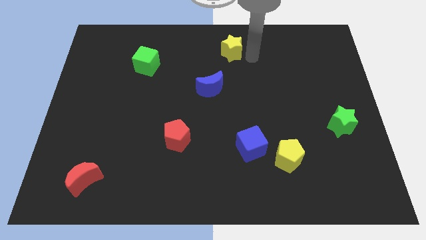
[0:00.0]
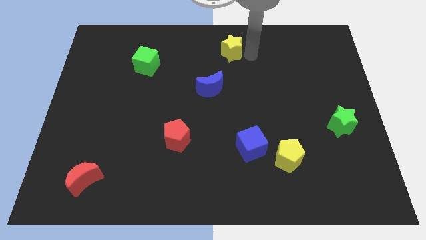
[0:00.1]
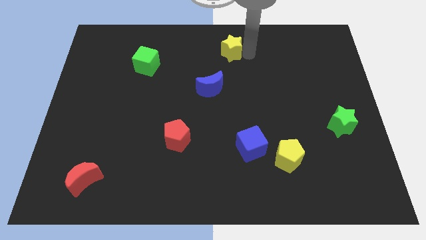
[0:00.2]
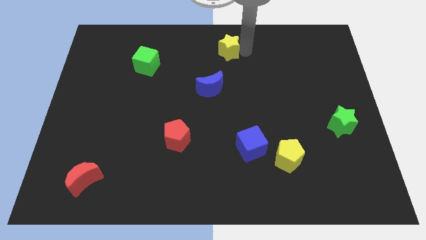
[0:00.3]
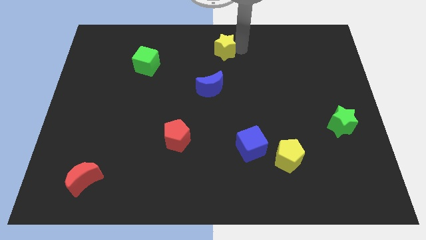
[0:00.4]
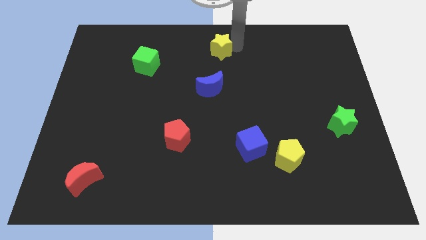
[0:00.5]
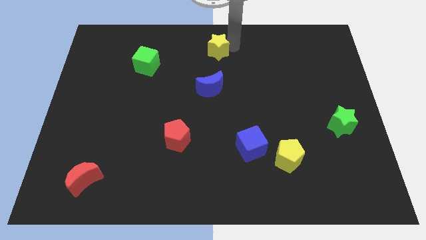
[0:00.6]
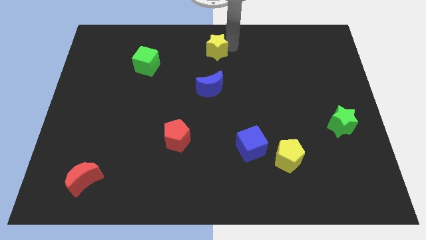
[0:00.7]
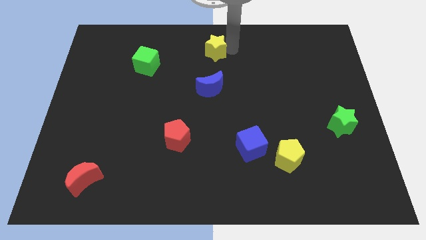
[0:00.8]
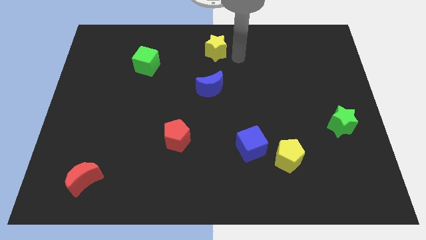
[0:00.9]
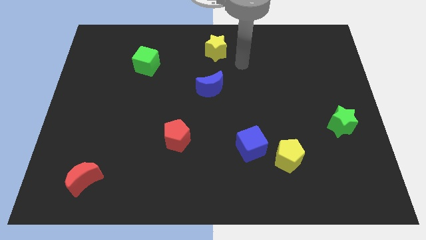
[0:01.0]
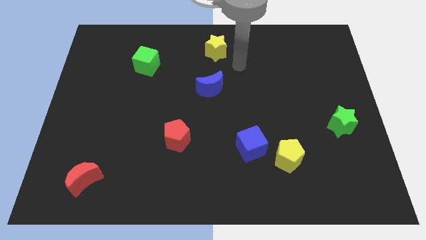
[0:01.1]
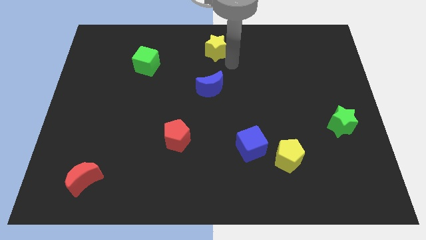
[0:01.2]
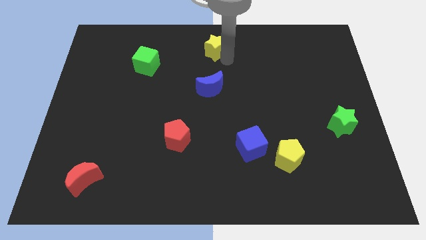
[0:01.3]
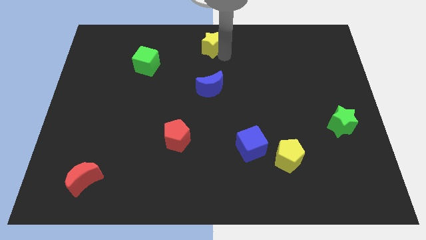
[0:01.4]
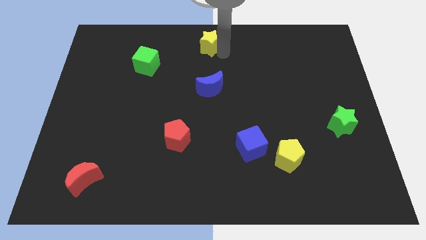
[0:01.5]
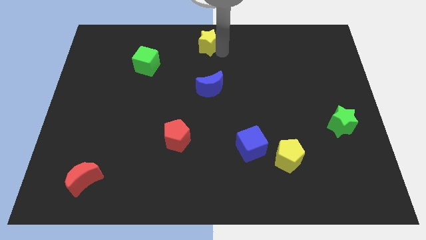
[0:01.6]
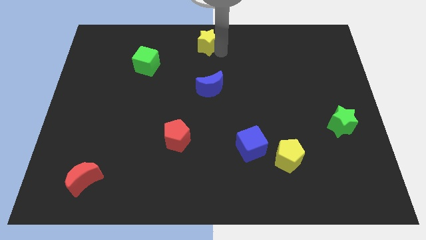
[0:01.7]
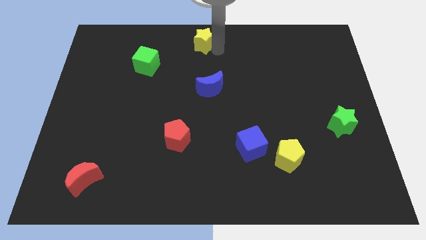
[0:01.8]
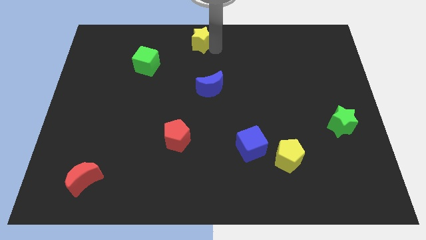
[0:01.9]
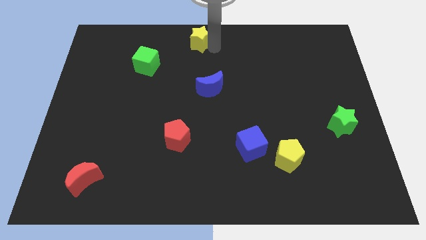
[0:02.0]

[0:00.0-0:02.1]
move yellow star diagonal to green cube

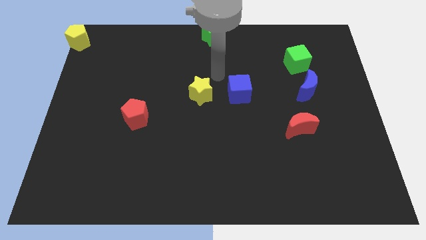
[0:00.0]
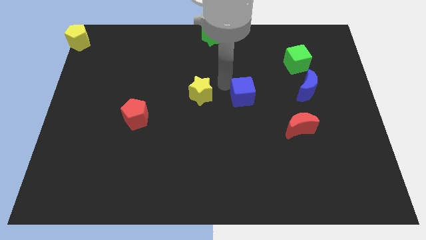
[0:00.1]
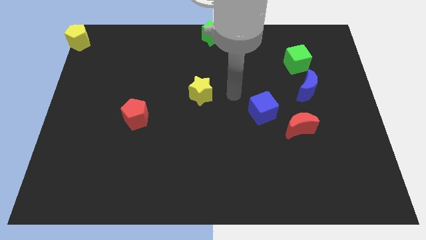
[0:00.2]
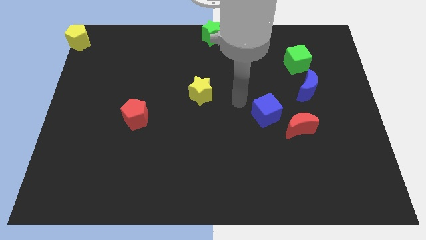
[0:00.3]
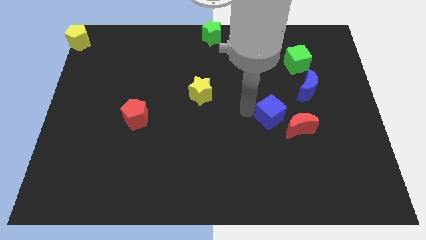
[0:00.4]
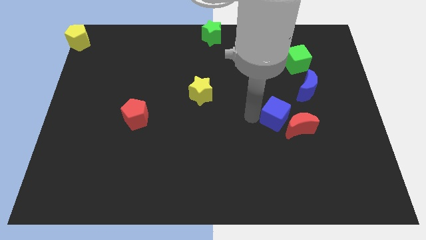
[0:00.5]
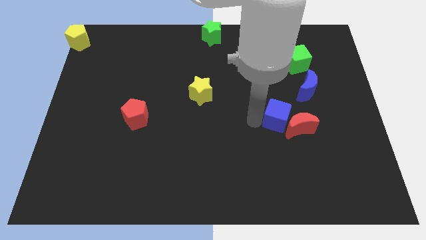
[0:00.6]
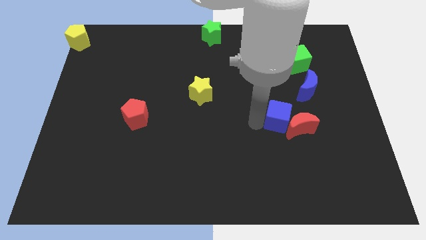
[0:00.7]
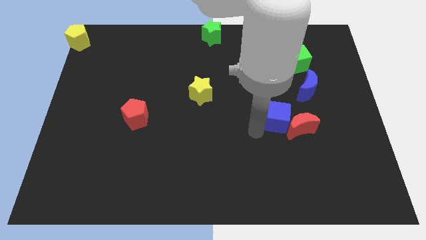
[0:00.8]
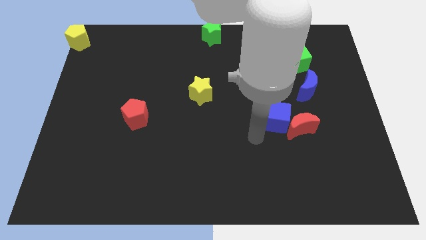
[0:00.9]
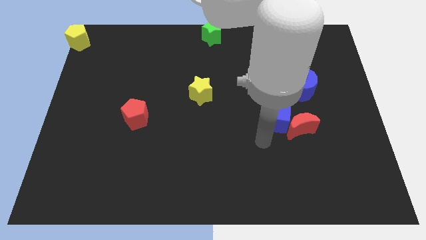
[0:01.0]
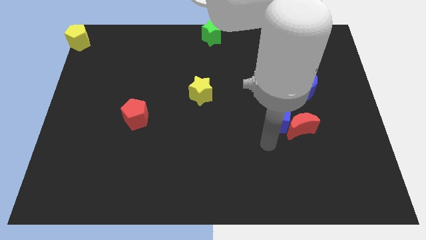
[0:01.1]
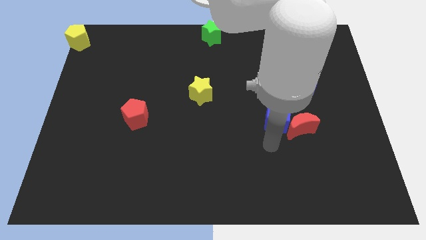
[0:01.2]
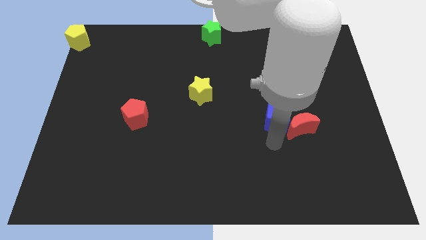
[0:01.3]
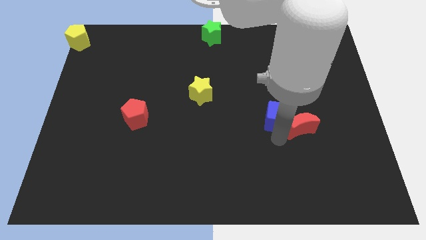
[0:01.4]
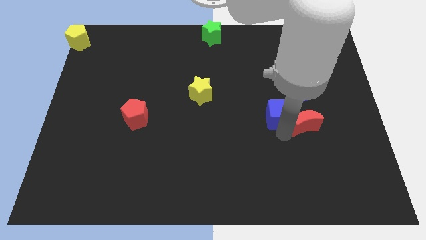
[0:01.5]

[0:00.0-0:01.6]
push blue cube near the red crescent

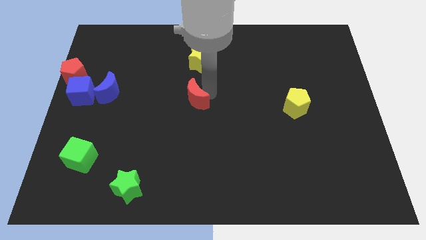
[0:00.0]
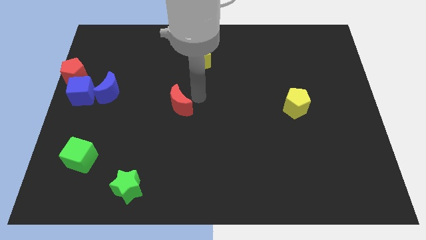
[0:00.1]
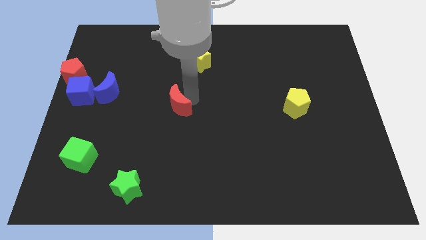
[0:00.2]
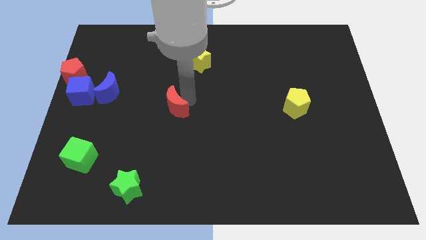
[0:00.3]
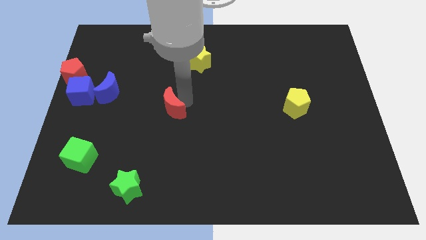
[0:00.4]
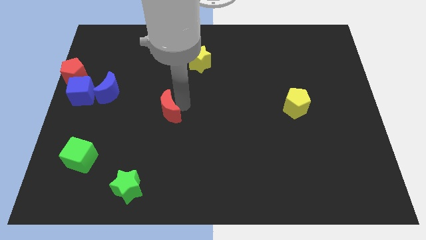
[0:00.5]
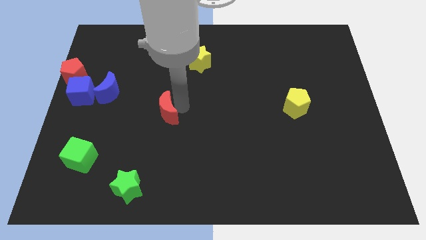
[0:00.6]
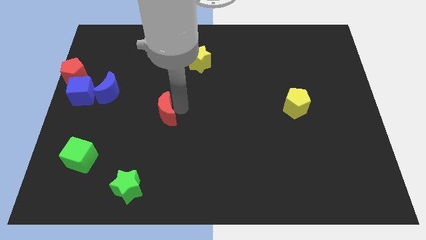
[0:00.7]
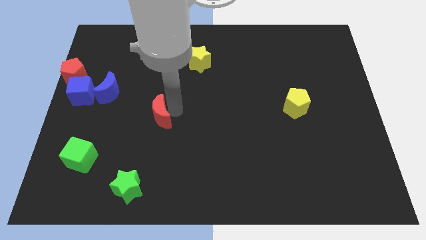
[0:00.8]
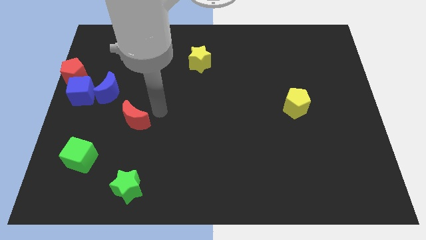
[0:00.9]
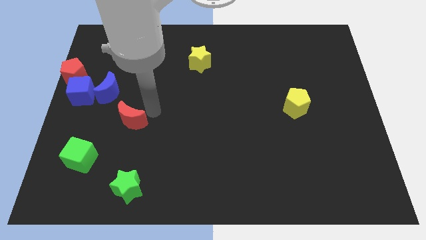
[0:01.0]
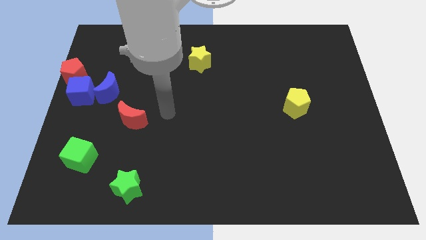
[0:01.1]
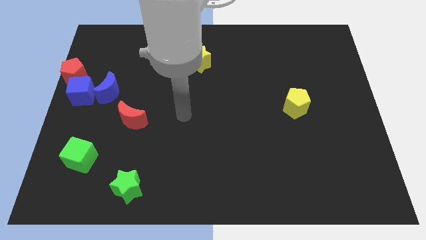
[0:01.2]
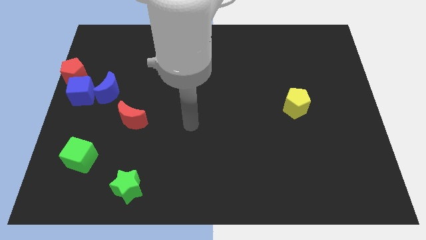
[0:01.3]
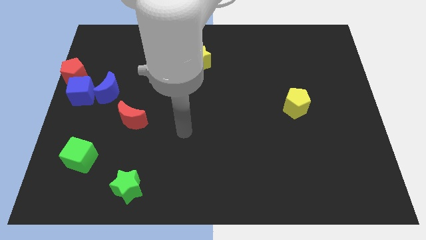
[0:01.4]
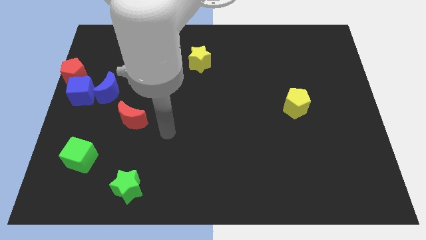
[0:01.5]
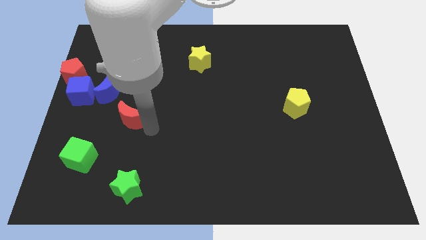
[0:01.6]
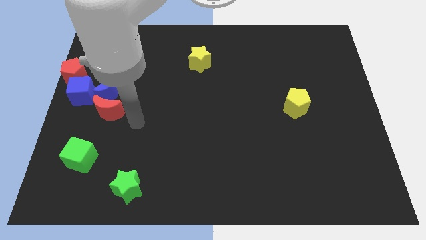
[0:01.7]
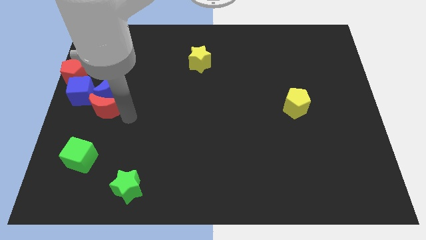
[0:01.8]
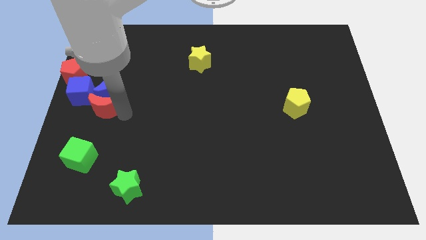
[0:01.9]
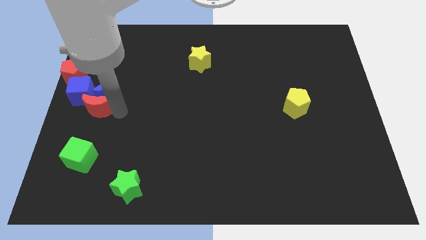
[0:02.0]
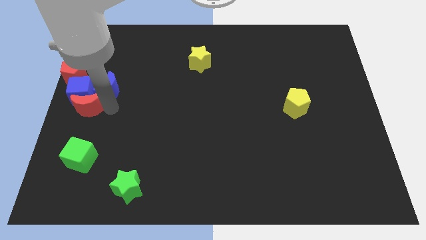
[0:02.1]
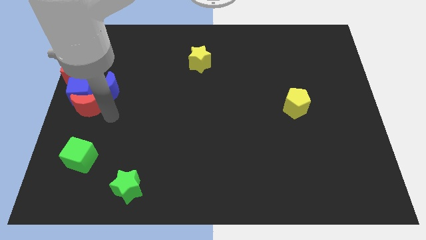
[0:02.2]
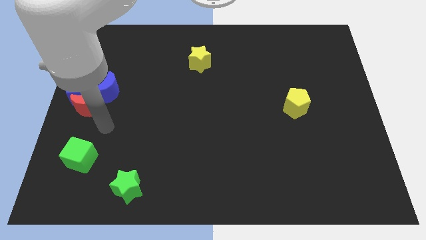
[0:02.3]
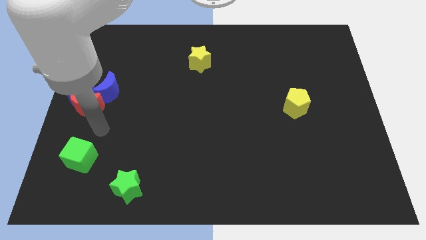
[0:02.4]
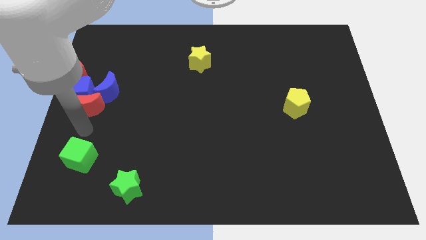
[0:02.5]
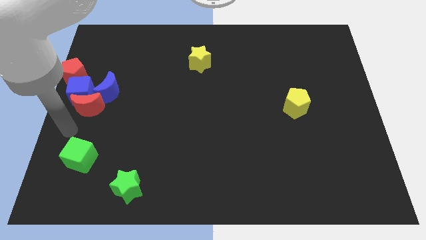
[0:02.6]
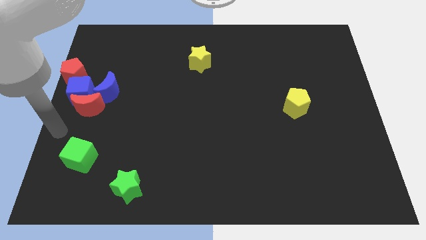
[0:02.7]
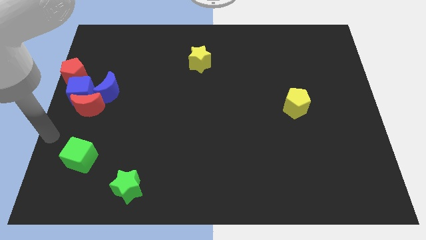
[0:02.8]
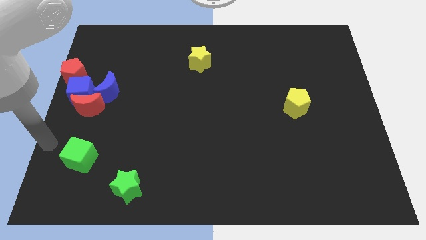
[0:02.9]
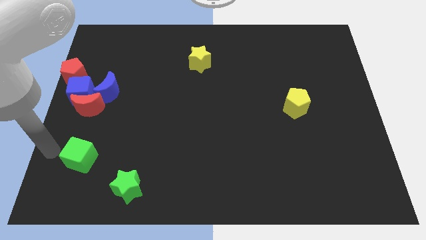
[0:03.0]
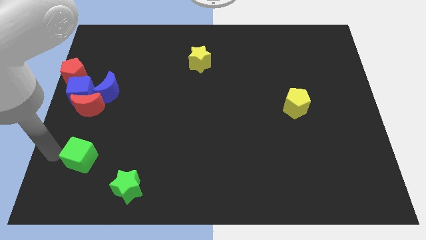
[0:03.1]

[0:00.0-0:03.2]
place the red moon at the bottom of blue blocks

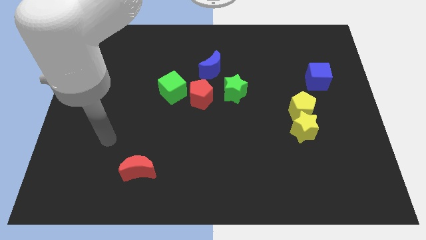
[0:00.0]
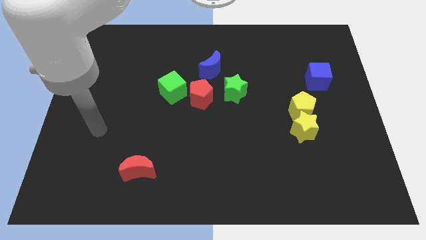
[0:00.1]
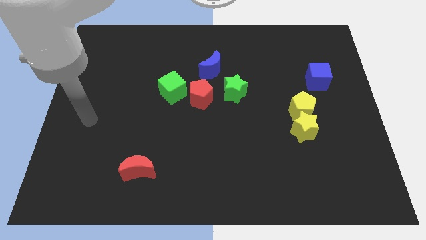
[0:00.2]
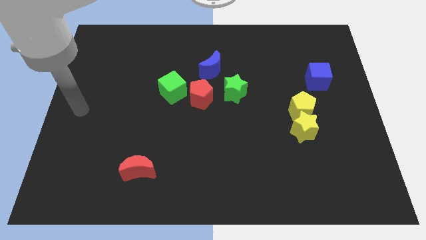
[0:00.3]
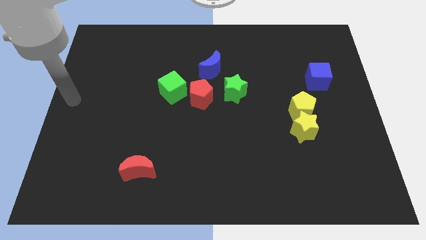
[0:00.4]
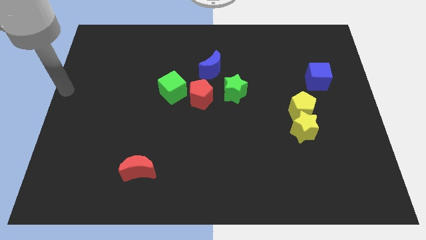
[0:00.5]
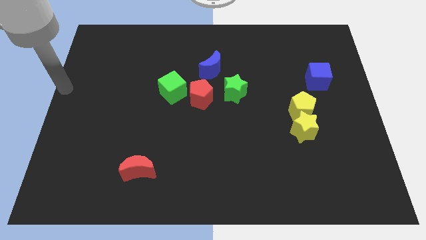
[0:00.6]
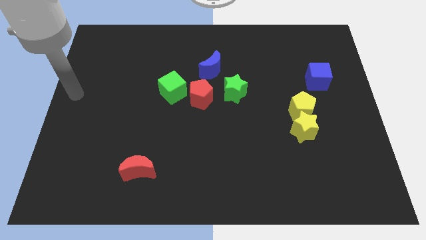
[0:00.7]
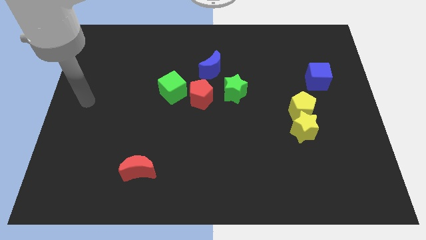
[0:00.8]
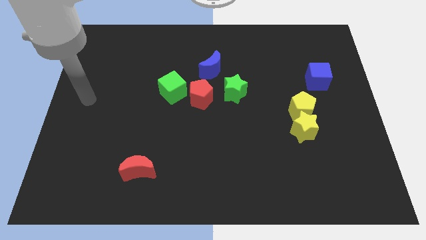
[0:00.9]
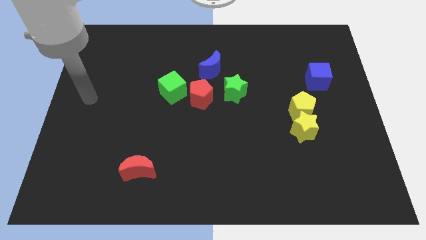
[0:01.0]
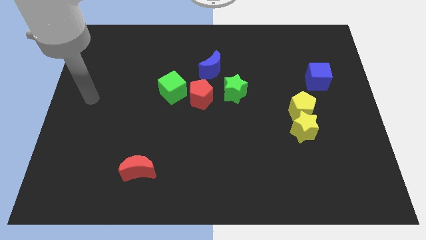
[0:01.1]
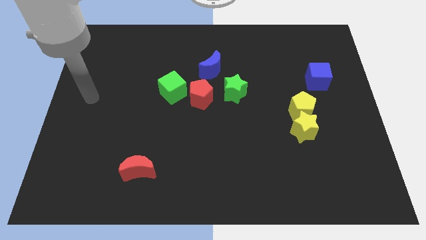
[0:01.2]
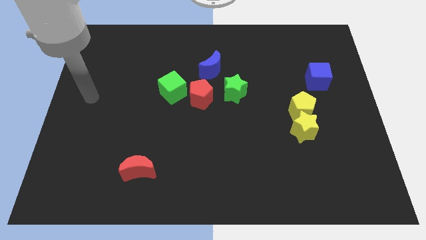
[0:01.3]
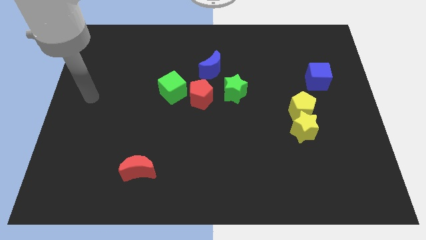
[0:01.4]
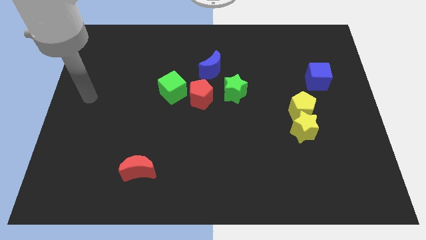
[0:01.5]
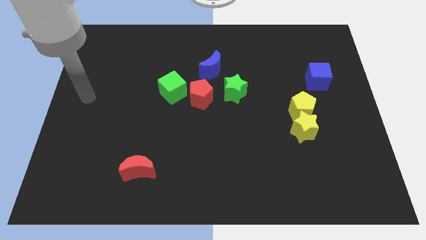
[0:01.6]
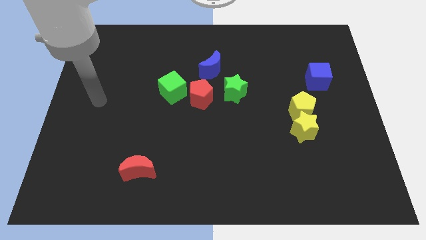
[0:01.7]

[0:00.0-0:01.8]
point the arm to the left of the green cube

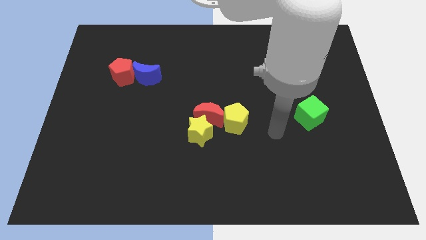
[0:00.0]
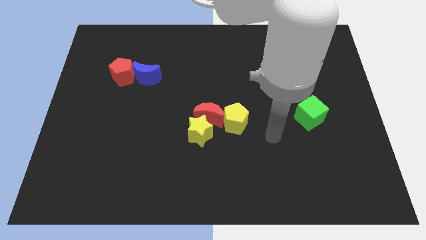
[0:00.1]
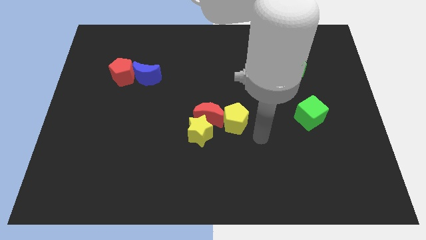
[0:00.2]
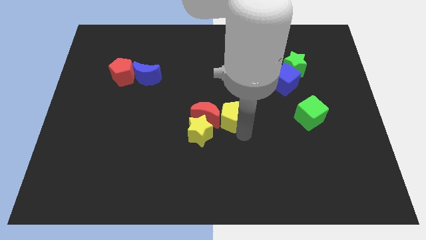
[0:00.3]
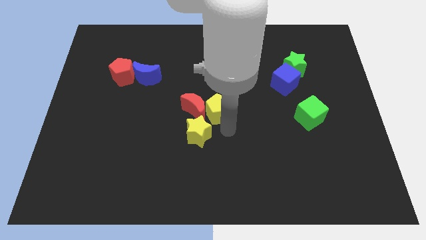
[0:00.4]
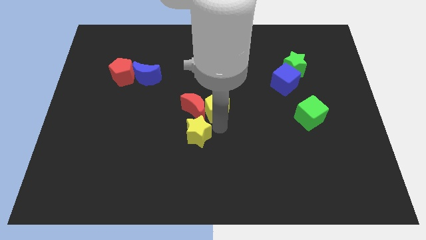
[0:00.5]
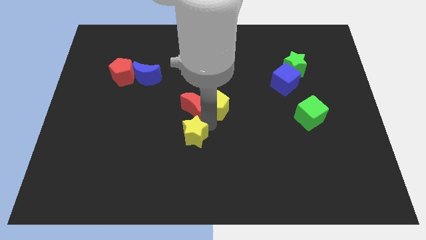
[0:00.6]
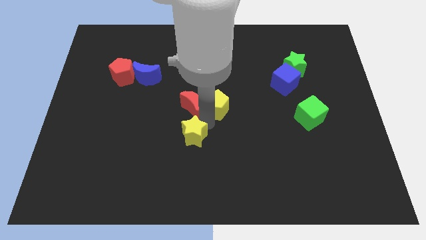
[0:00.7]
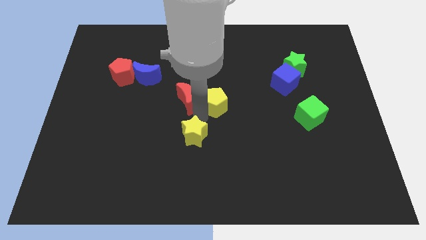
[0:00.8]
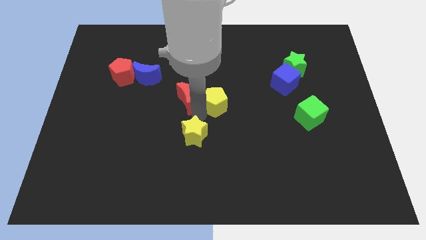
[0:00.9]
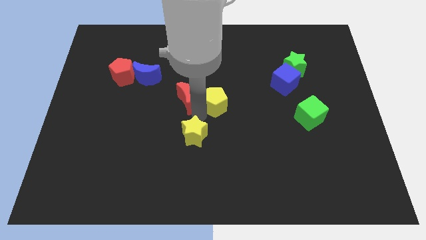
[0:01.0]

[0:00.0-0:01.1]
separate the yellow star and the red moon
